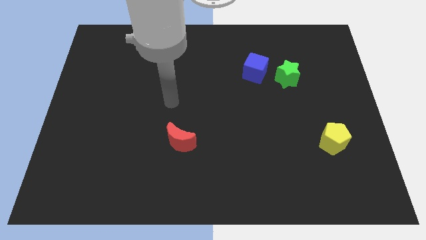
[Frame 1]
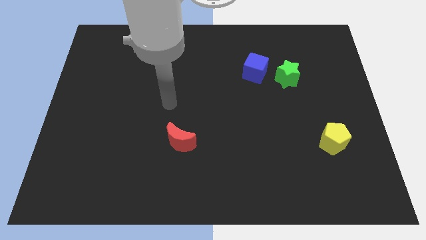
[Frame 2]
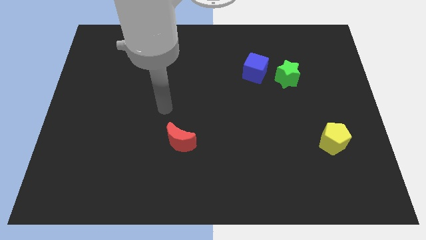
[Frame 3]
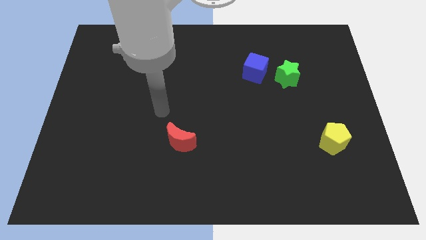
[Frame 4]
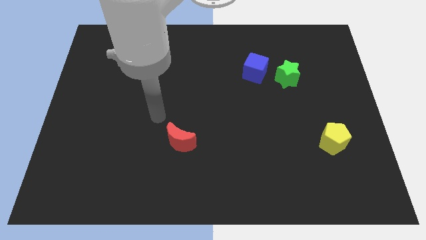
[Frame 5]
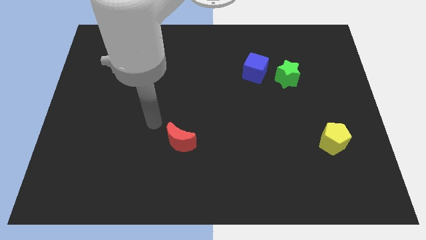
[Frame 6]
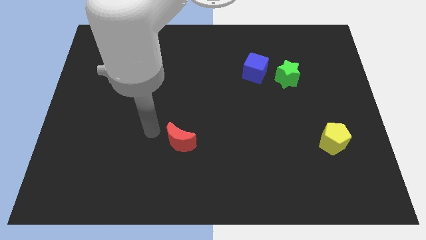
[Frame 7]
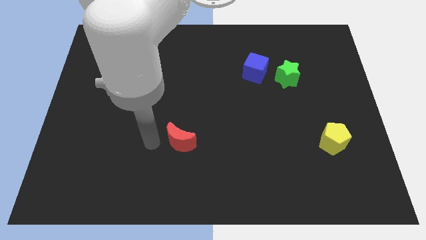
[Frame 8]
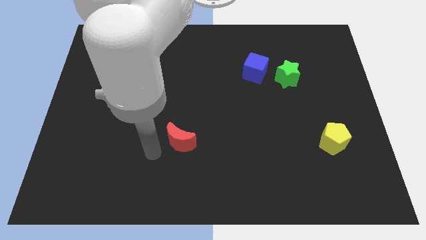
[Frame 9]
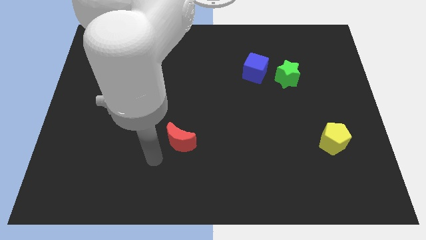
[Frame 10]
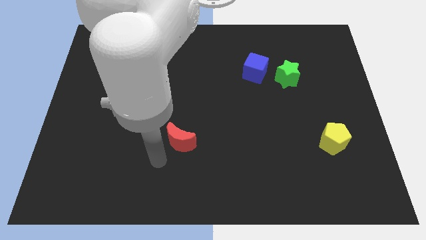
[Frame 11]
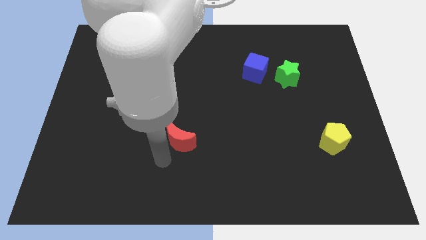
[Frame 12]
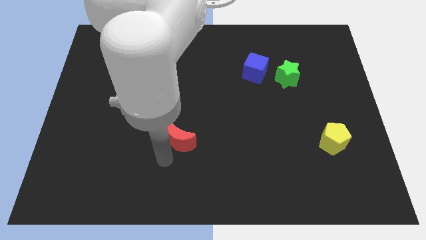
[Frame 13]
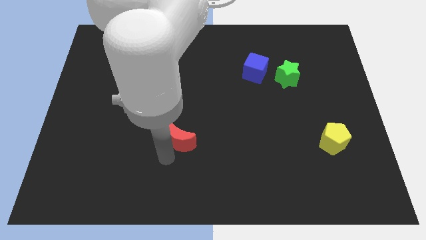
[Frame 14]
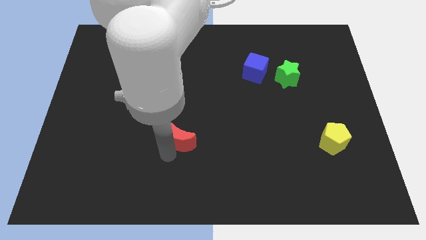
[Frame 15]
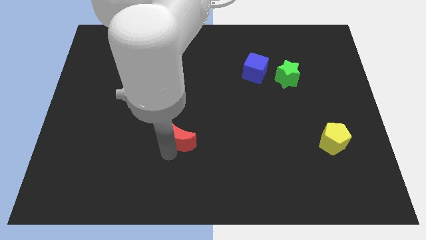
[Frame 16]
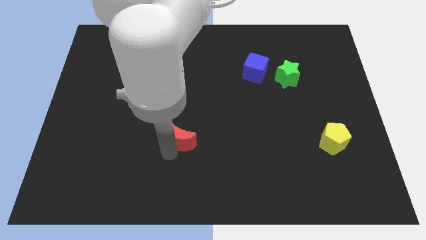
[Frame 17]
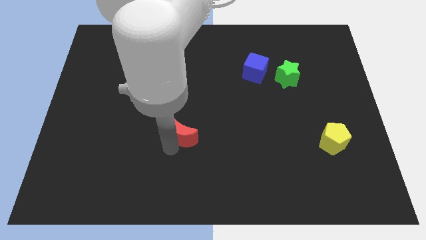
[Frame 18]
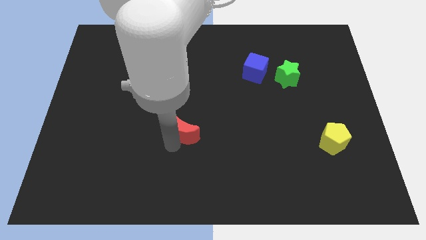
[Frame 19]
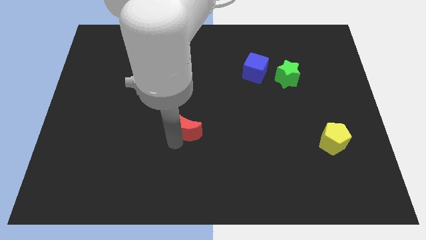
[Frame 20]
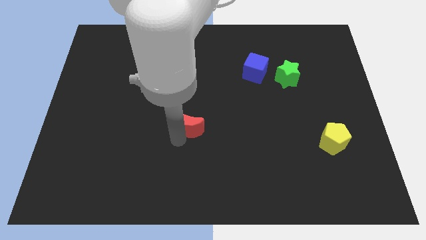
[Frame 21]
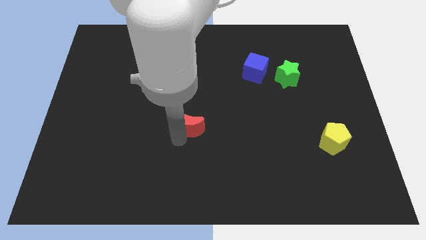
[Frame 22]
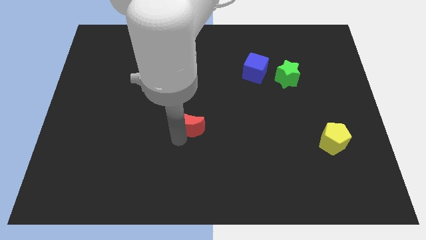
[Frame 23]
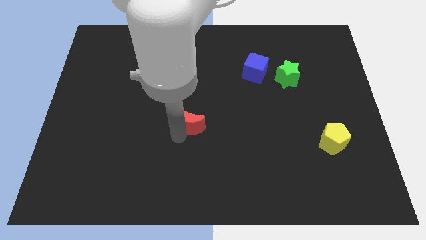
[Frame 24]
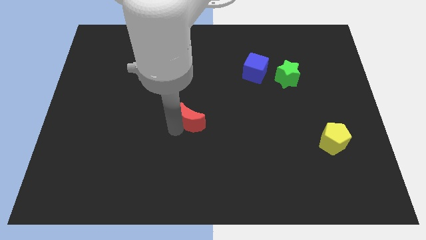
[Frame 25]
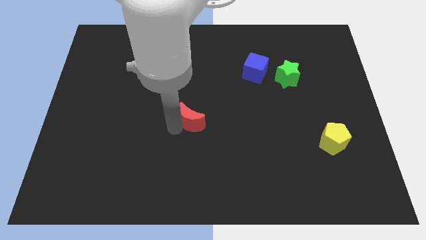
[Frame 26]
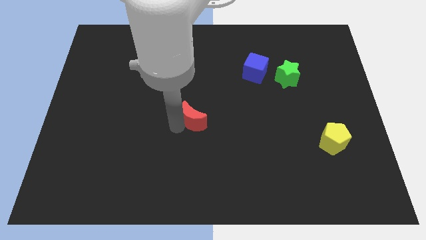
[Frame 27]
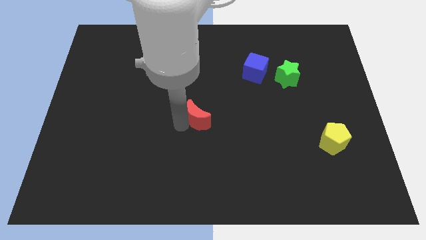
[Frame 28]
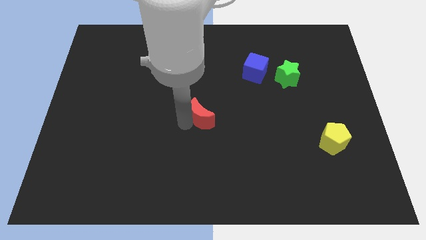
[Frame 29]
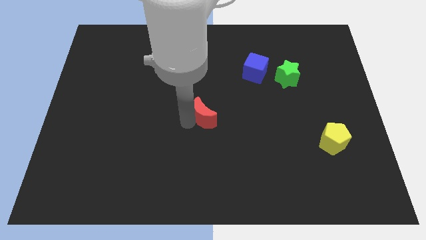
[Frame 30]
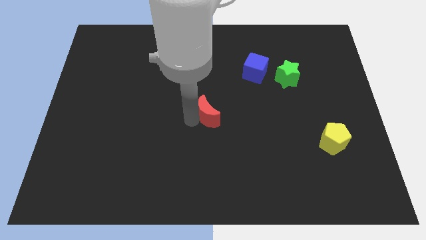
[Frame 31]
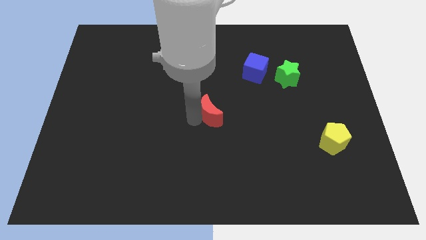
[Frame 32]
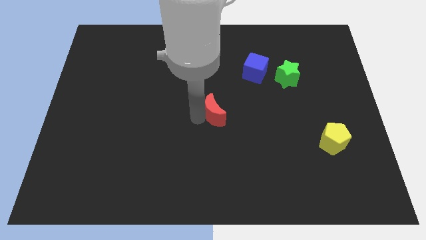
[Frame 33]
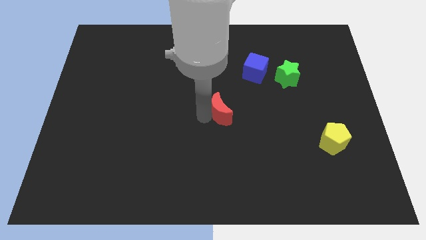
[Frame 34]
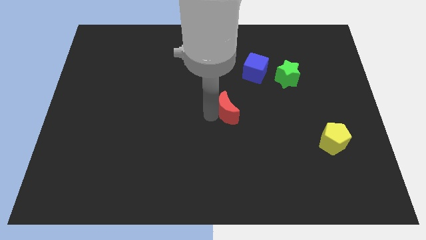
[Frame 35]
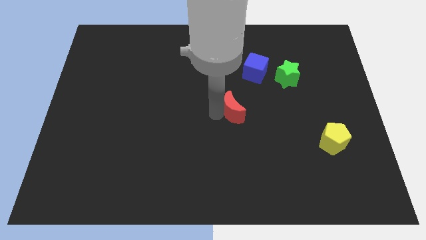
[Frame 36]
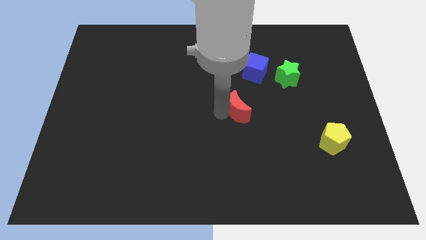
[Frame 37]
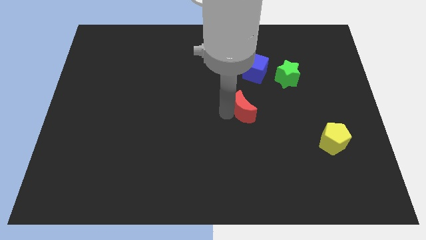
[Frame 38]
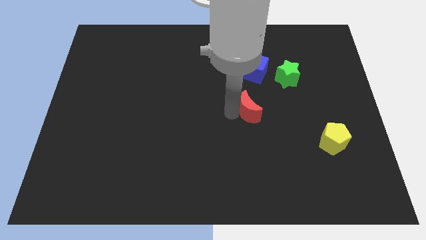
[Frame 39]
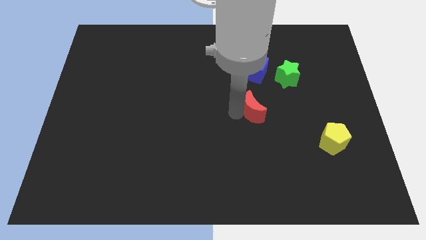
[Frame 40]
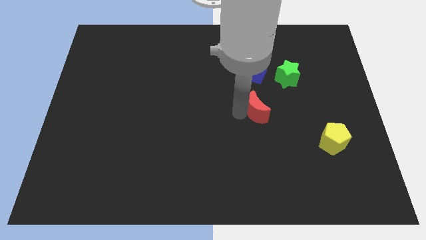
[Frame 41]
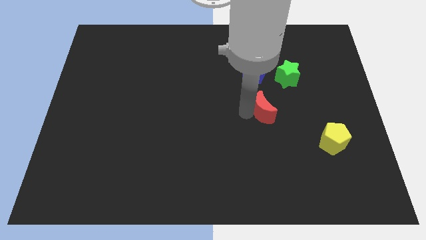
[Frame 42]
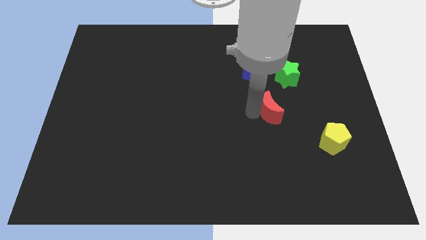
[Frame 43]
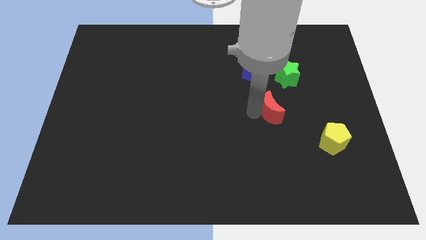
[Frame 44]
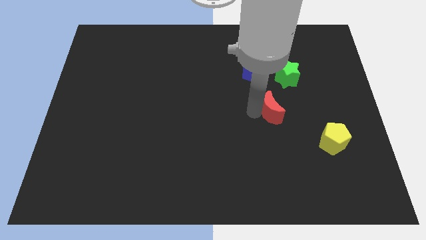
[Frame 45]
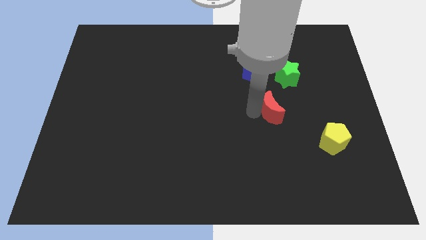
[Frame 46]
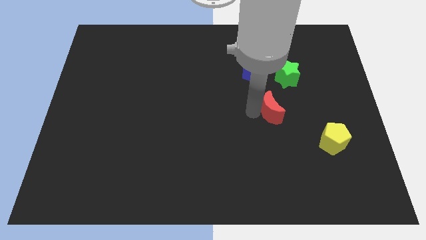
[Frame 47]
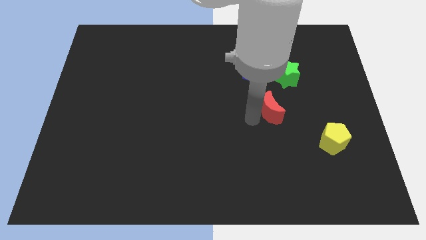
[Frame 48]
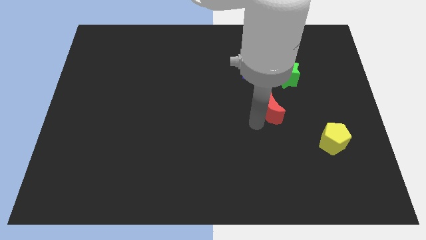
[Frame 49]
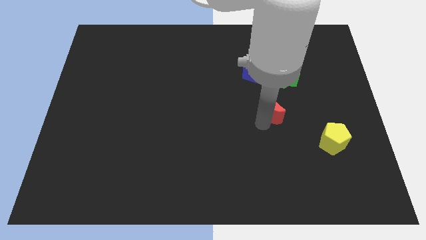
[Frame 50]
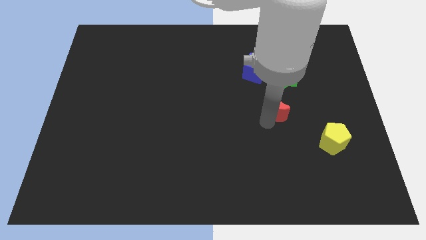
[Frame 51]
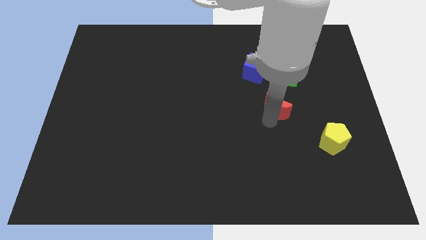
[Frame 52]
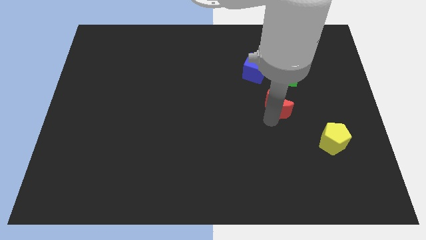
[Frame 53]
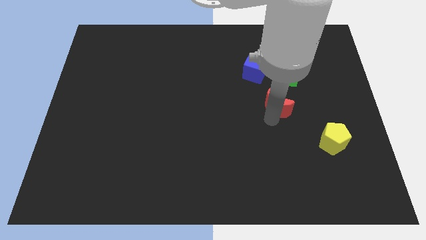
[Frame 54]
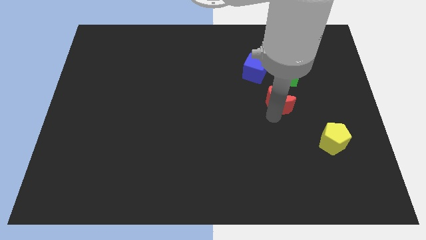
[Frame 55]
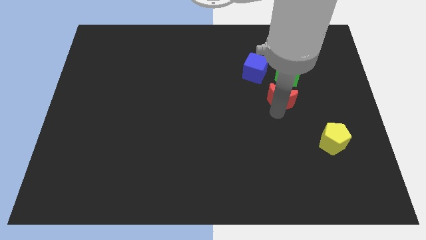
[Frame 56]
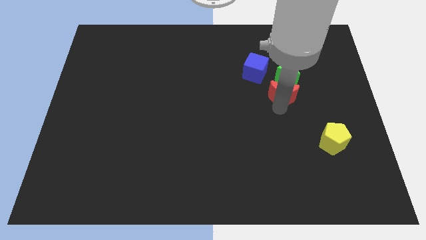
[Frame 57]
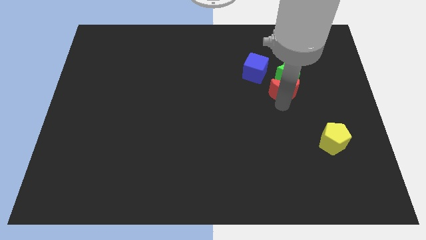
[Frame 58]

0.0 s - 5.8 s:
slide the red block next to the green block

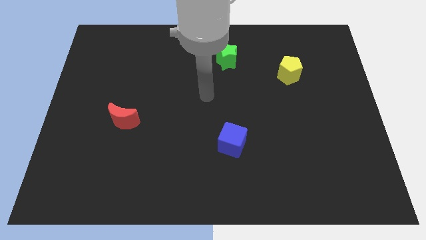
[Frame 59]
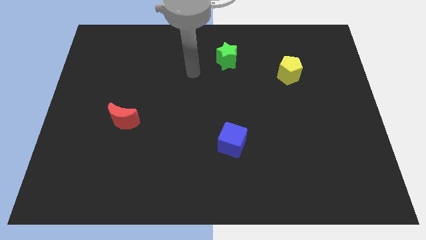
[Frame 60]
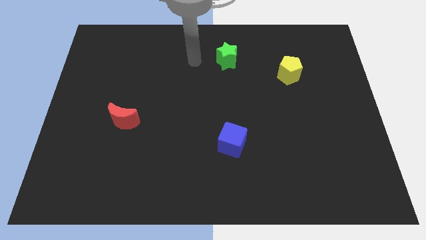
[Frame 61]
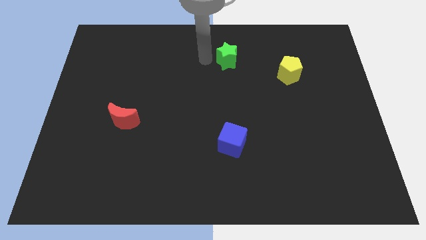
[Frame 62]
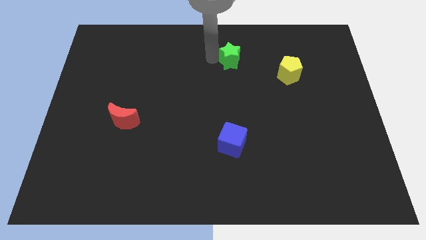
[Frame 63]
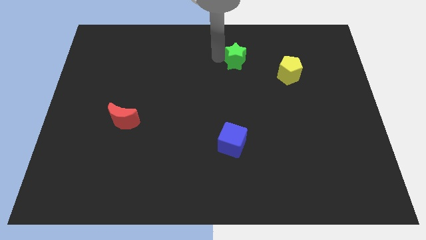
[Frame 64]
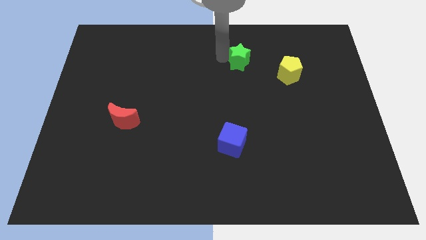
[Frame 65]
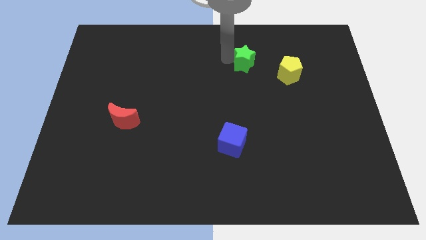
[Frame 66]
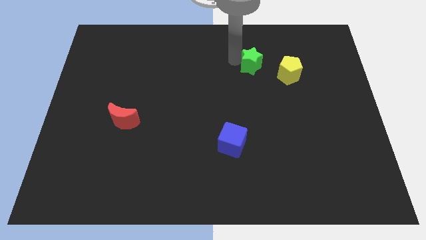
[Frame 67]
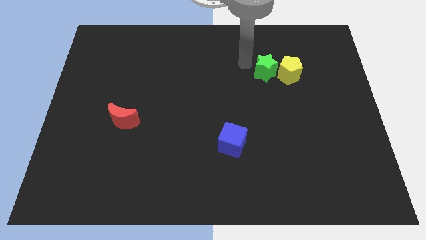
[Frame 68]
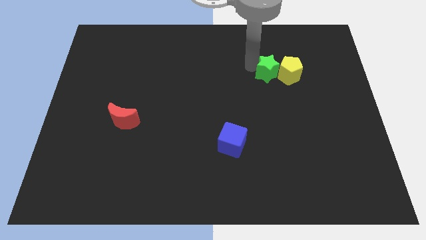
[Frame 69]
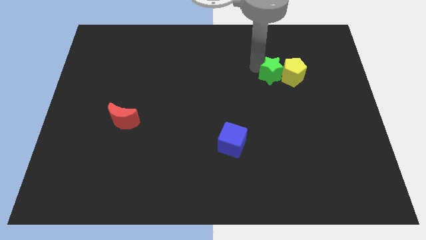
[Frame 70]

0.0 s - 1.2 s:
slide the star towards the pentagon

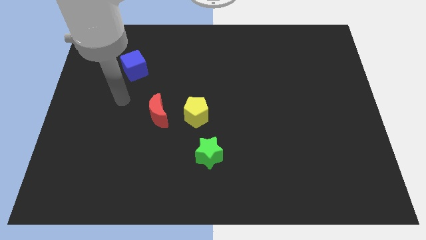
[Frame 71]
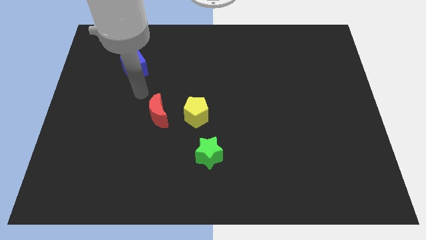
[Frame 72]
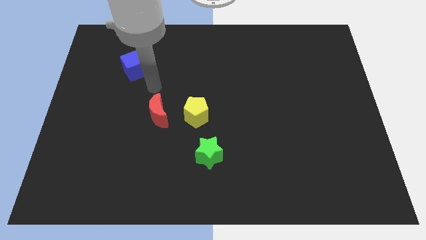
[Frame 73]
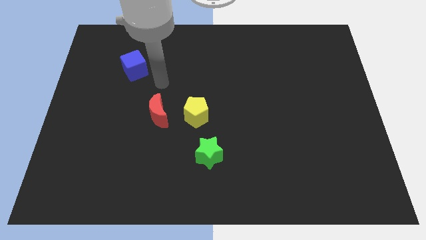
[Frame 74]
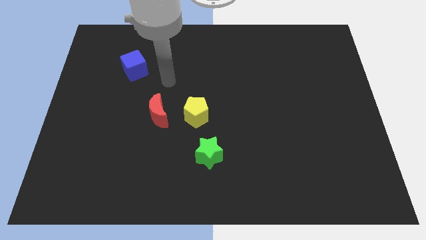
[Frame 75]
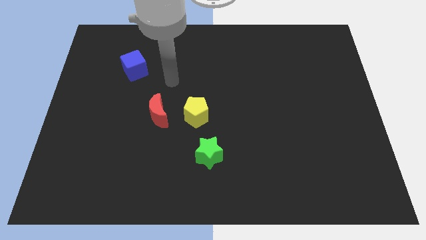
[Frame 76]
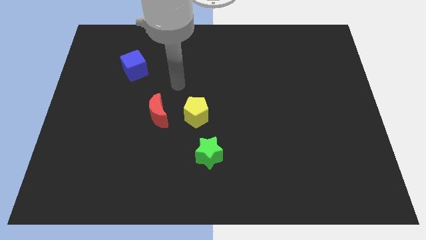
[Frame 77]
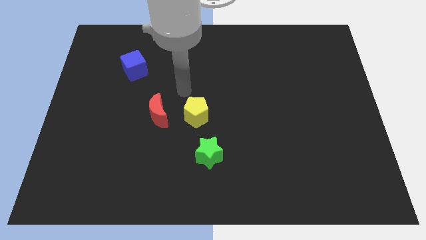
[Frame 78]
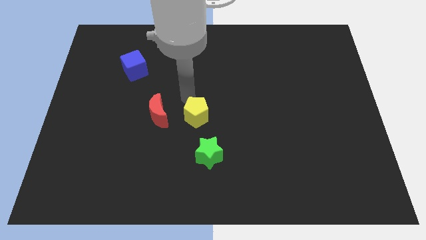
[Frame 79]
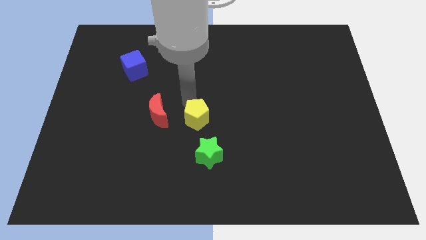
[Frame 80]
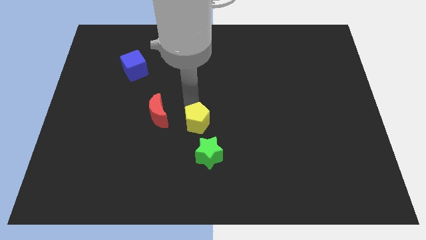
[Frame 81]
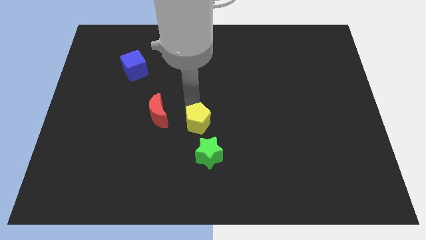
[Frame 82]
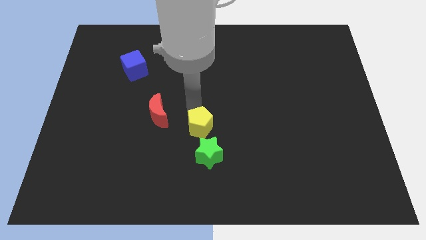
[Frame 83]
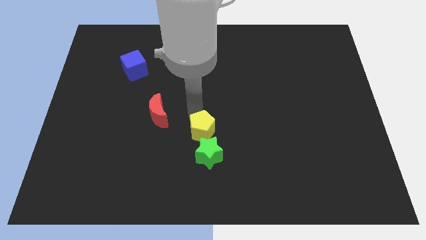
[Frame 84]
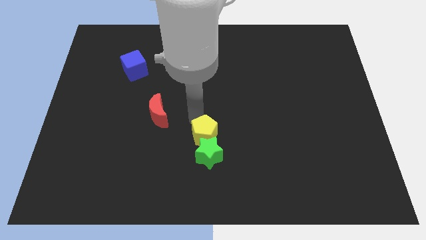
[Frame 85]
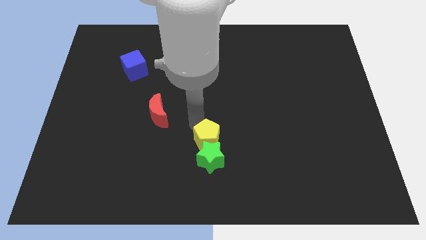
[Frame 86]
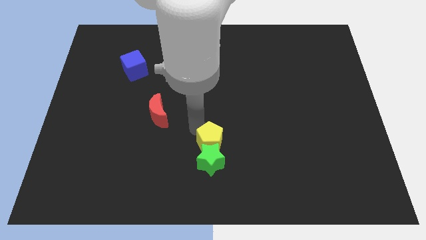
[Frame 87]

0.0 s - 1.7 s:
move the yellow block to the green star
